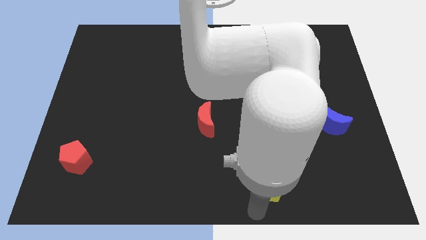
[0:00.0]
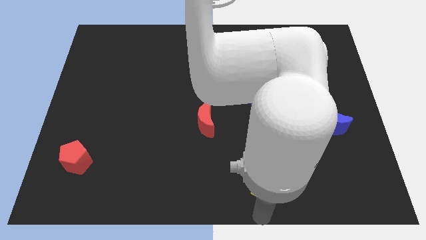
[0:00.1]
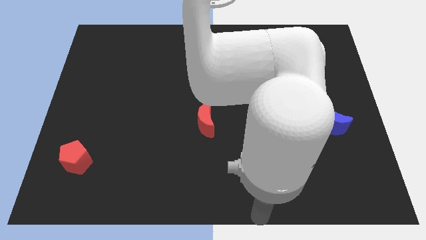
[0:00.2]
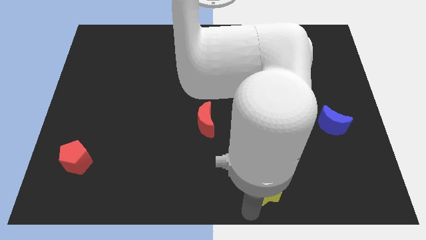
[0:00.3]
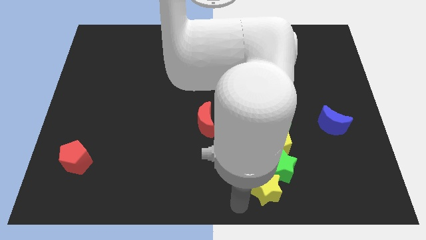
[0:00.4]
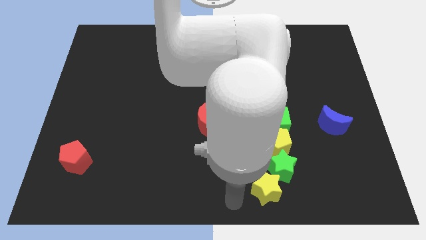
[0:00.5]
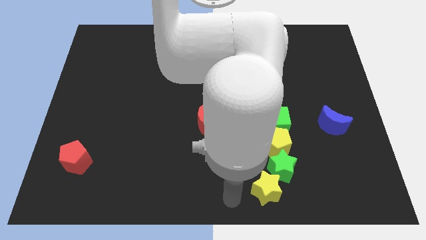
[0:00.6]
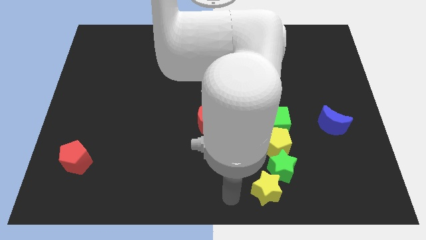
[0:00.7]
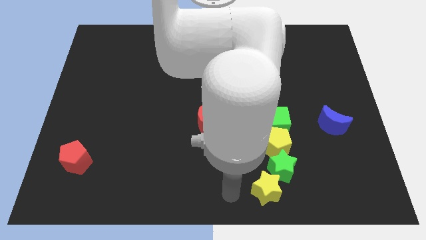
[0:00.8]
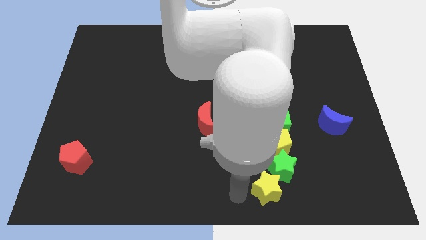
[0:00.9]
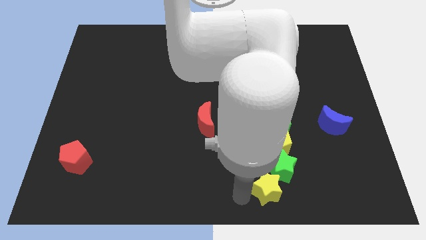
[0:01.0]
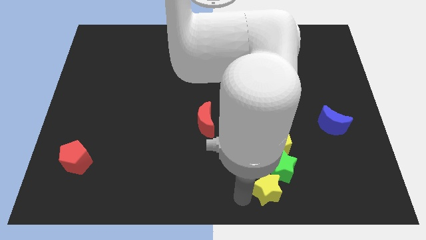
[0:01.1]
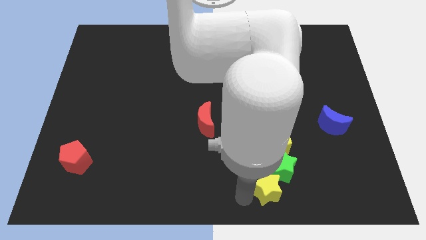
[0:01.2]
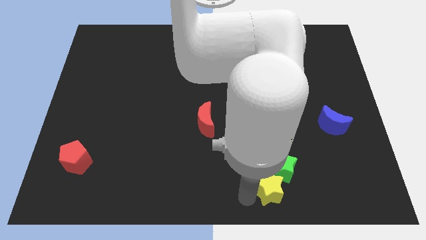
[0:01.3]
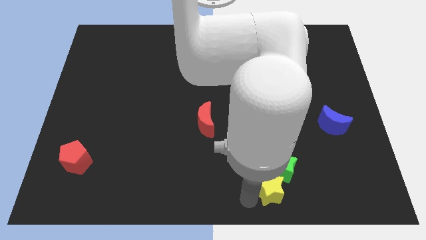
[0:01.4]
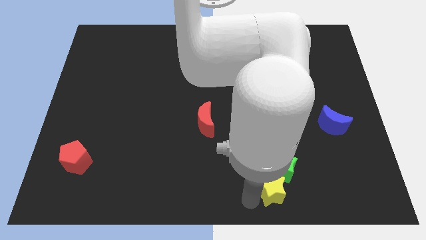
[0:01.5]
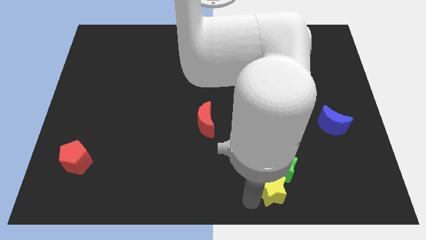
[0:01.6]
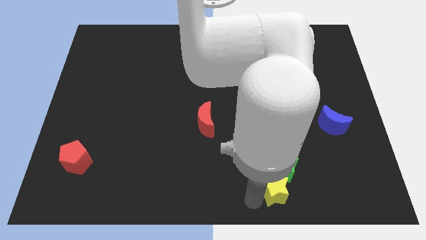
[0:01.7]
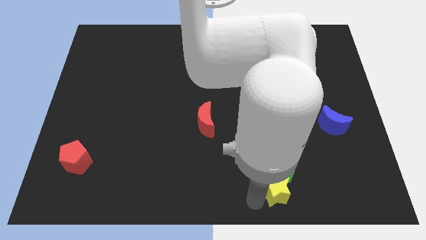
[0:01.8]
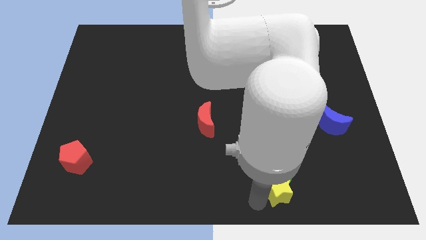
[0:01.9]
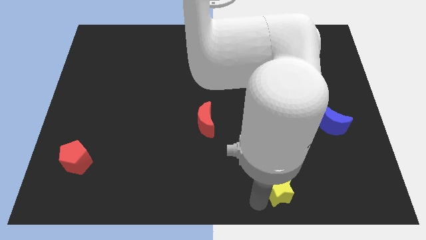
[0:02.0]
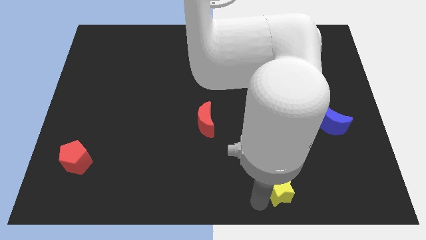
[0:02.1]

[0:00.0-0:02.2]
place yellow star to the bottom of green star

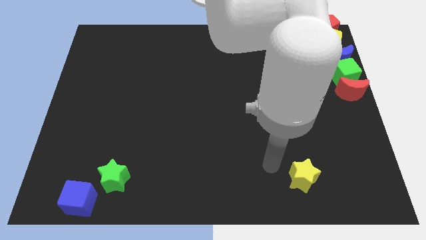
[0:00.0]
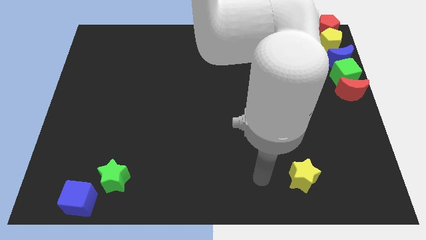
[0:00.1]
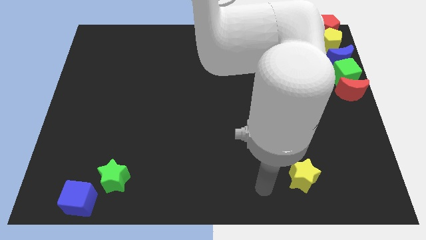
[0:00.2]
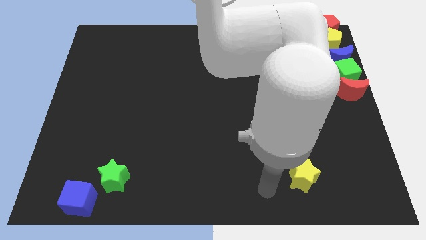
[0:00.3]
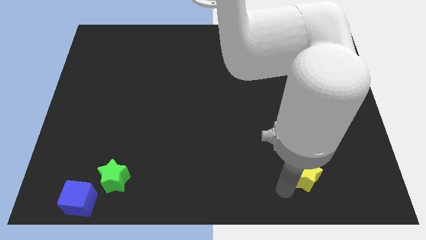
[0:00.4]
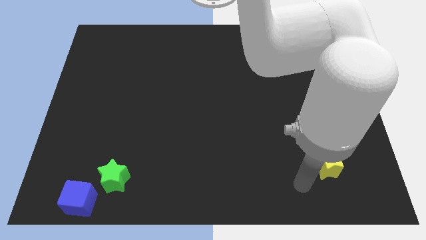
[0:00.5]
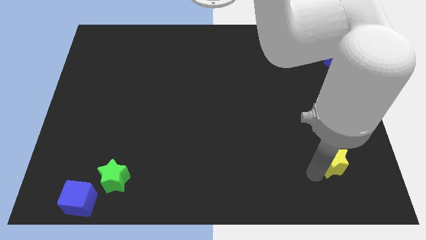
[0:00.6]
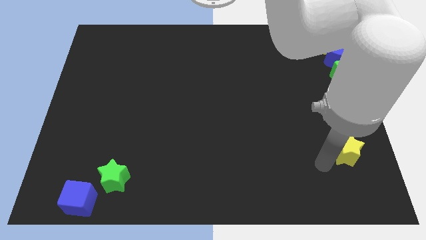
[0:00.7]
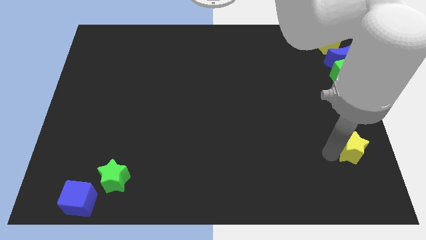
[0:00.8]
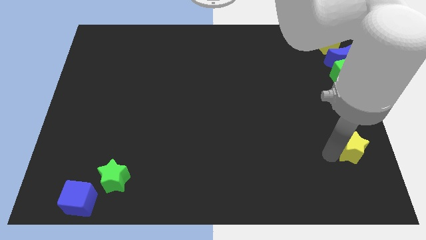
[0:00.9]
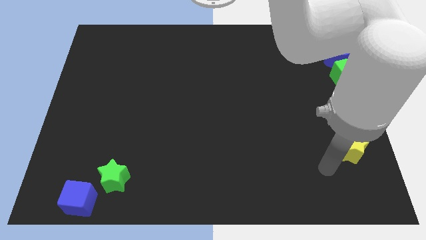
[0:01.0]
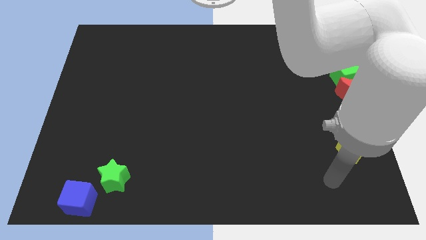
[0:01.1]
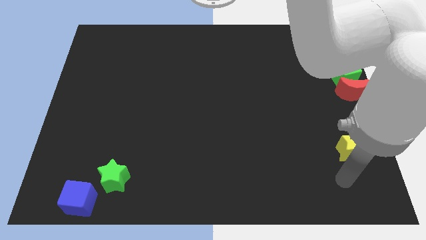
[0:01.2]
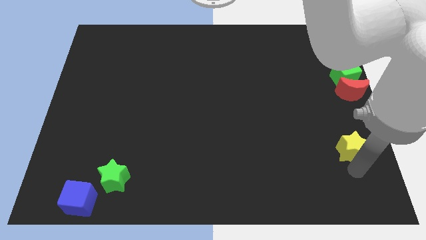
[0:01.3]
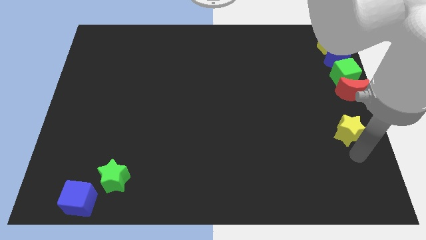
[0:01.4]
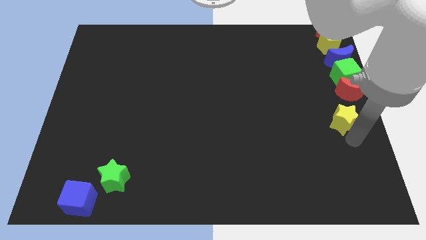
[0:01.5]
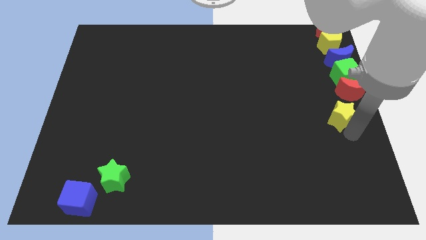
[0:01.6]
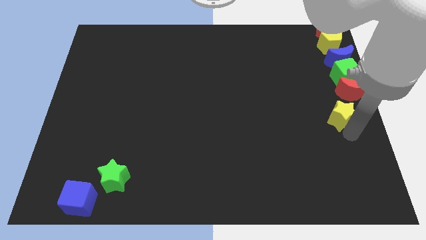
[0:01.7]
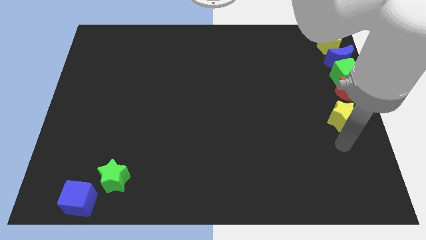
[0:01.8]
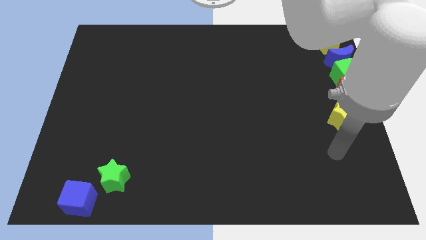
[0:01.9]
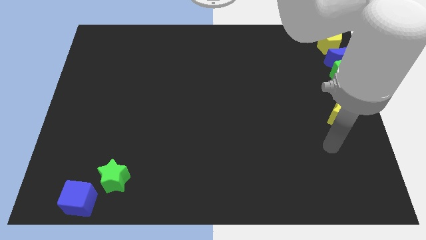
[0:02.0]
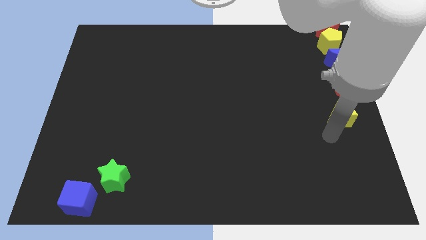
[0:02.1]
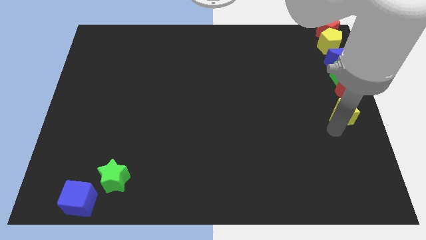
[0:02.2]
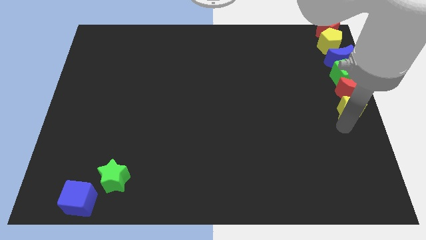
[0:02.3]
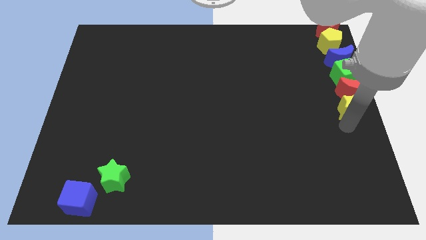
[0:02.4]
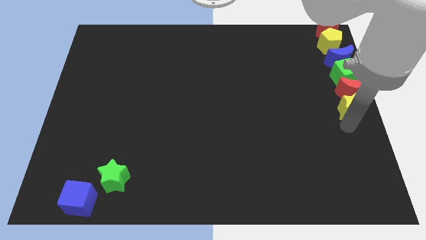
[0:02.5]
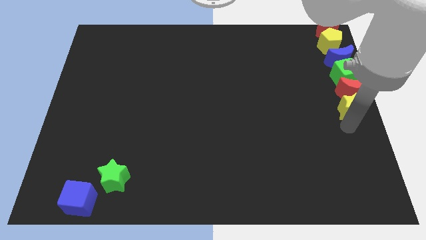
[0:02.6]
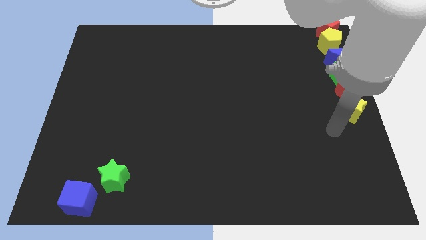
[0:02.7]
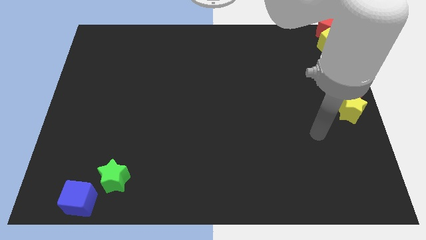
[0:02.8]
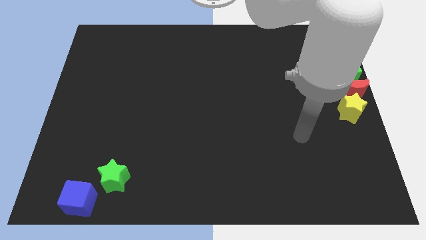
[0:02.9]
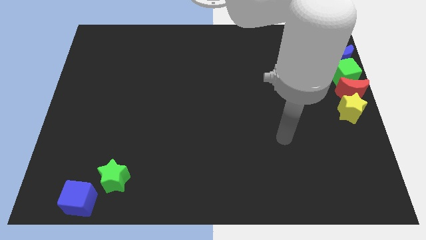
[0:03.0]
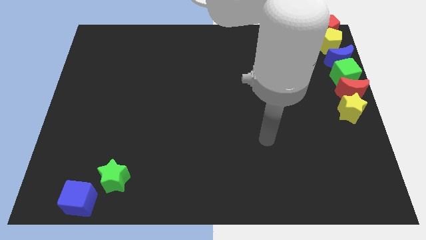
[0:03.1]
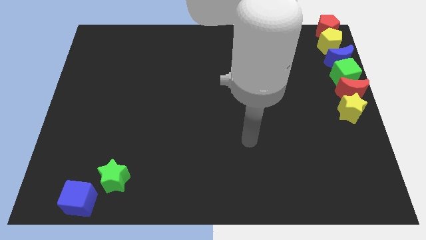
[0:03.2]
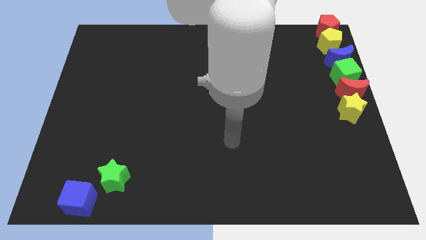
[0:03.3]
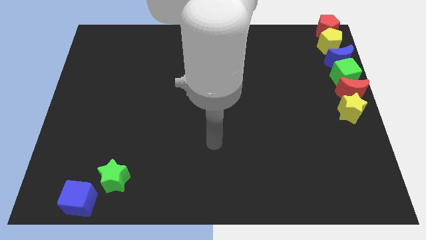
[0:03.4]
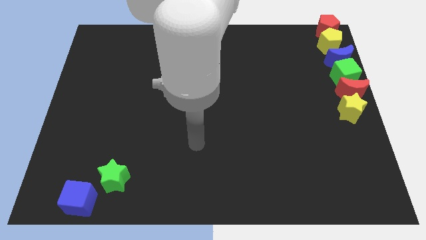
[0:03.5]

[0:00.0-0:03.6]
drag the yellow star below the red crescent

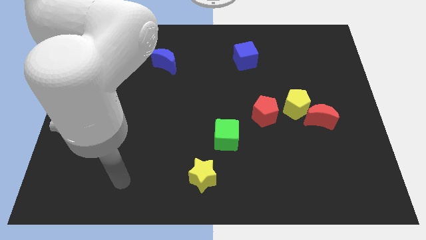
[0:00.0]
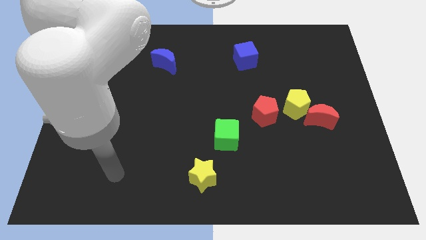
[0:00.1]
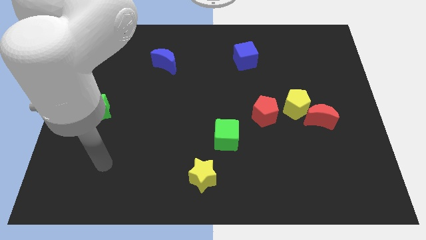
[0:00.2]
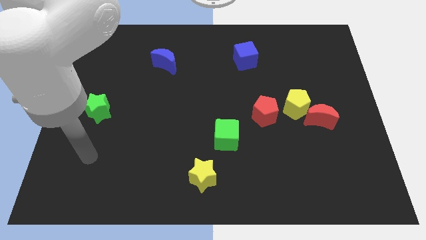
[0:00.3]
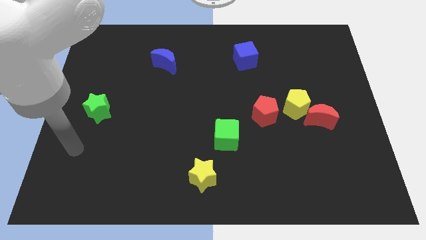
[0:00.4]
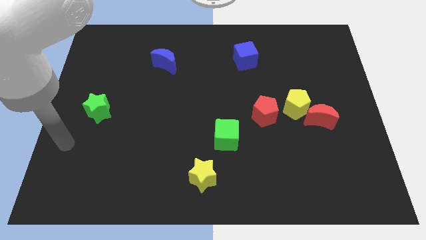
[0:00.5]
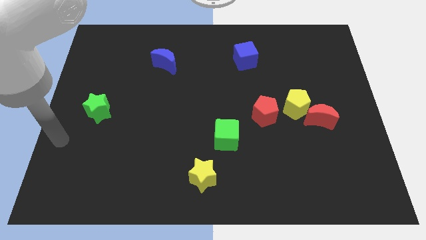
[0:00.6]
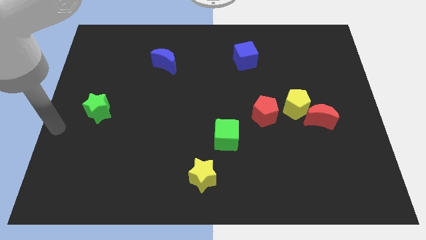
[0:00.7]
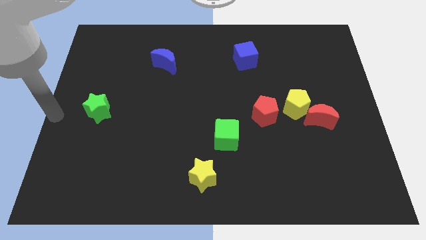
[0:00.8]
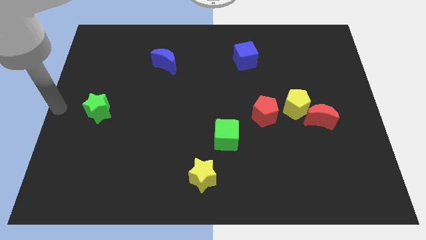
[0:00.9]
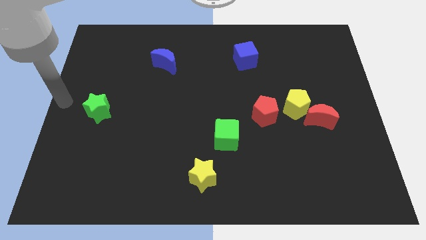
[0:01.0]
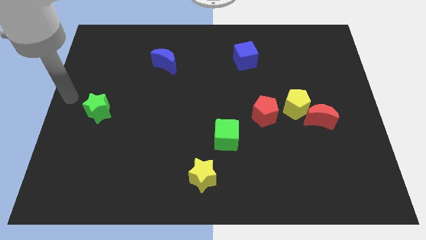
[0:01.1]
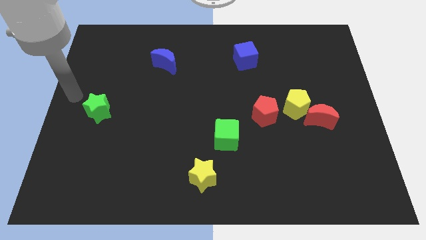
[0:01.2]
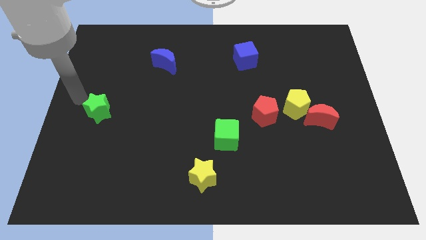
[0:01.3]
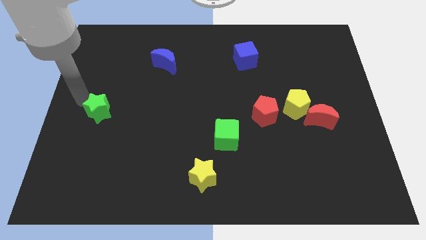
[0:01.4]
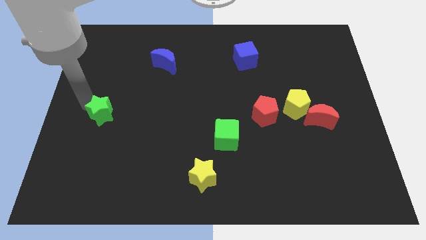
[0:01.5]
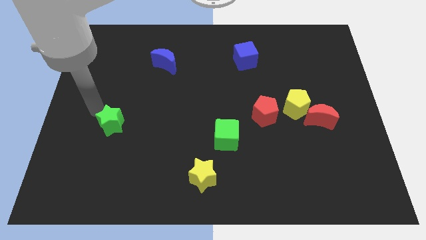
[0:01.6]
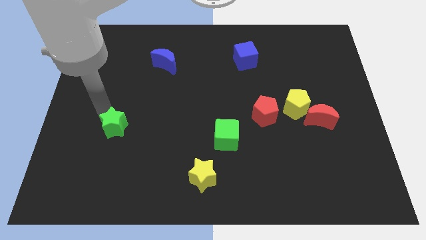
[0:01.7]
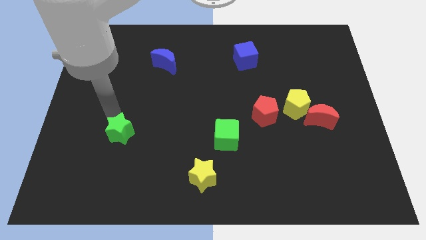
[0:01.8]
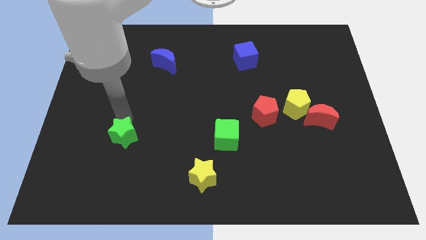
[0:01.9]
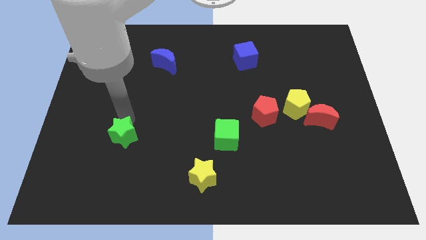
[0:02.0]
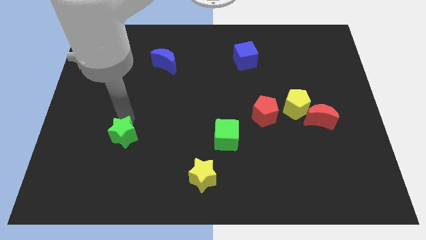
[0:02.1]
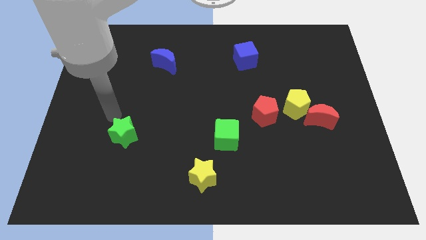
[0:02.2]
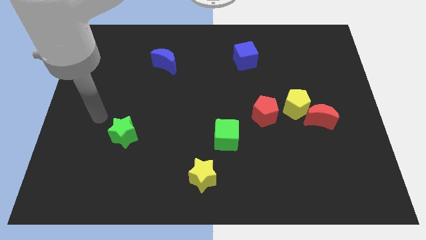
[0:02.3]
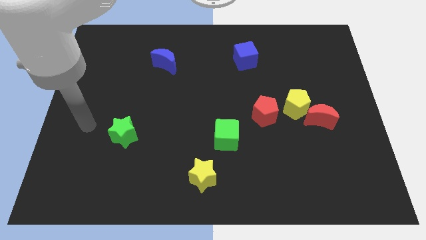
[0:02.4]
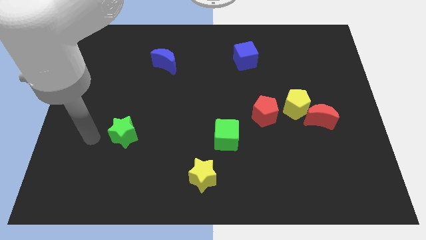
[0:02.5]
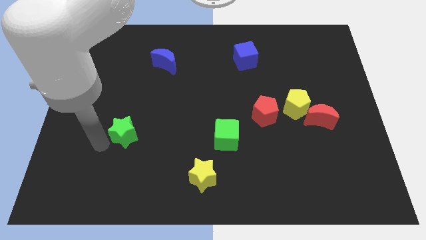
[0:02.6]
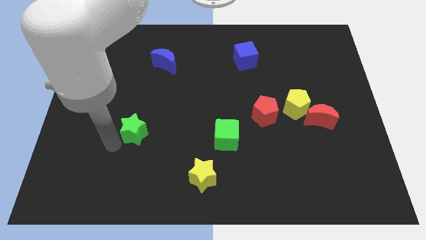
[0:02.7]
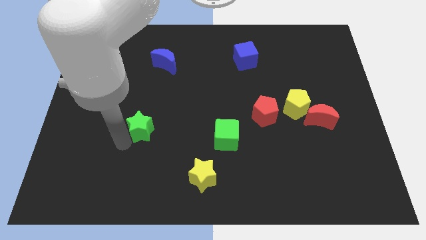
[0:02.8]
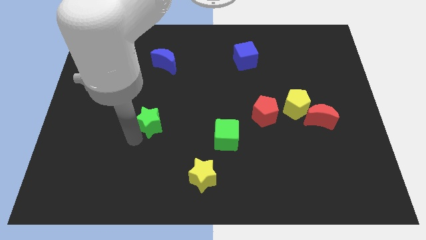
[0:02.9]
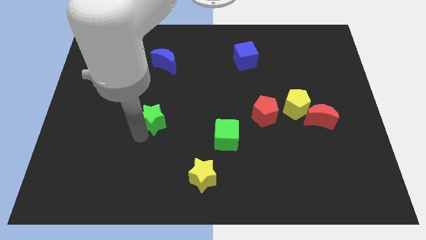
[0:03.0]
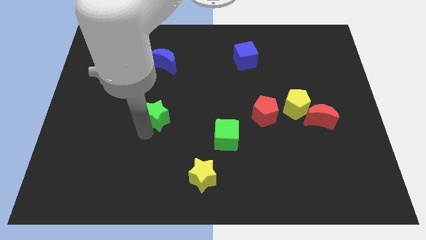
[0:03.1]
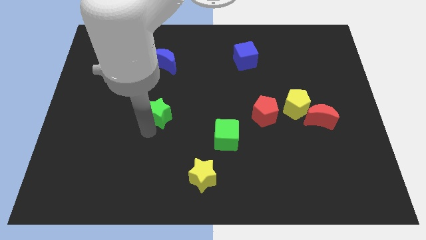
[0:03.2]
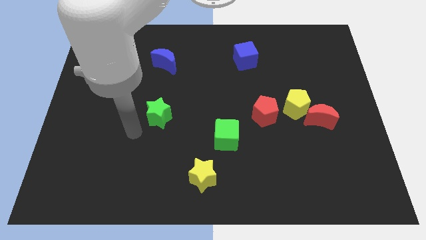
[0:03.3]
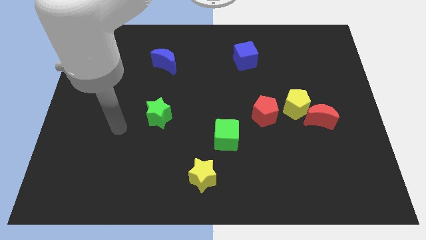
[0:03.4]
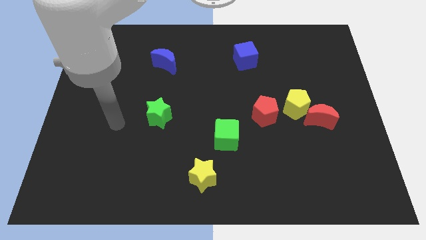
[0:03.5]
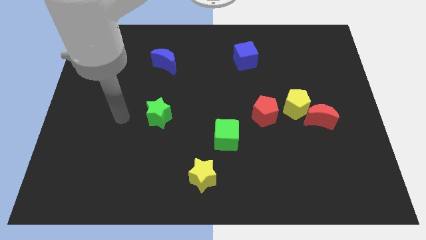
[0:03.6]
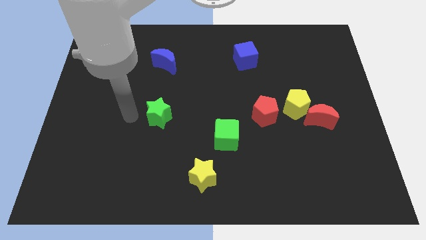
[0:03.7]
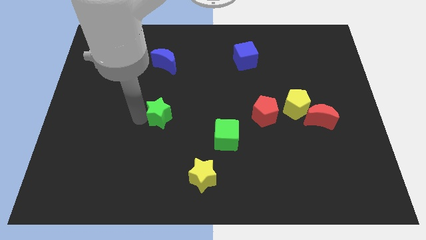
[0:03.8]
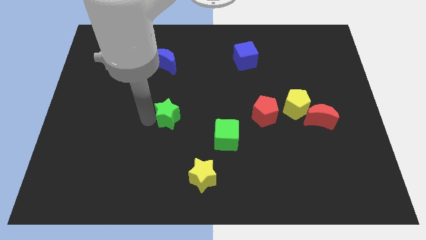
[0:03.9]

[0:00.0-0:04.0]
push the green star towards the center of the board
